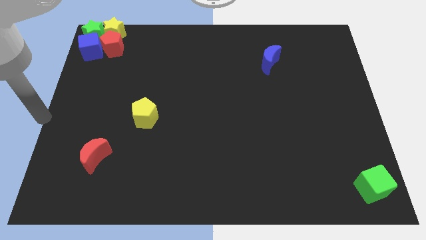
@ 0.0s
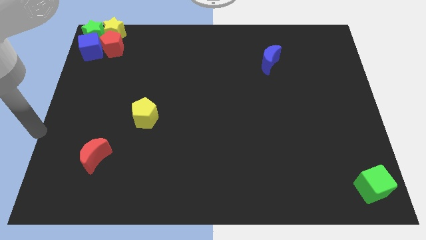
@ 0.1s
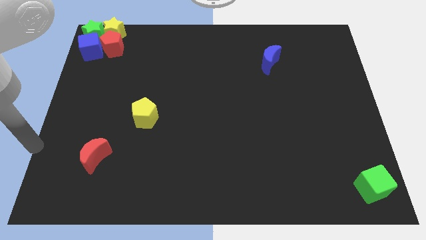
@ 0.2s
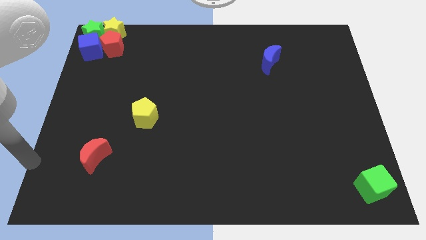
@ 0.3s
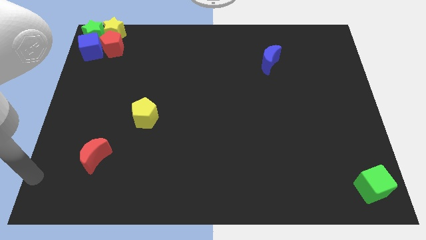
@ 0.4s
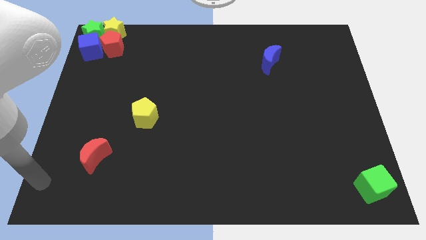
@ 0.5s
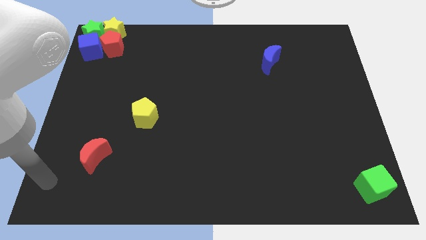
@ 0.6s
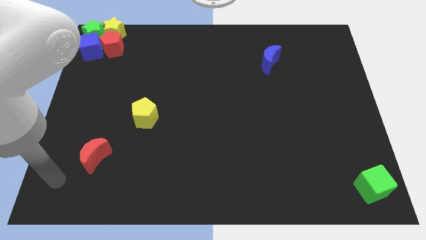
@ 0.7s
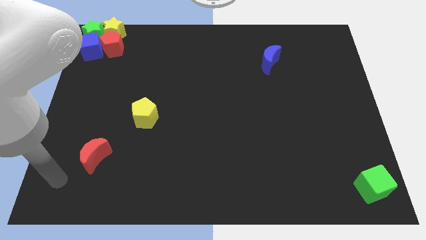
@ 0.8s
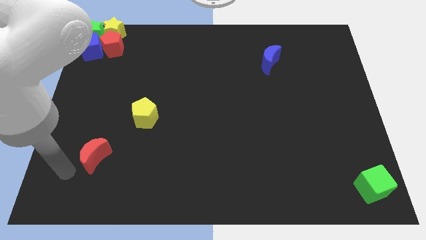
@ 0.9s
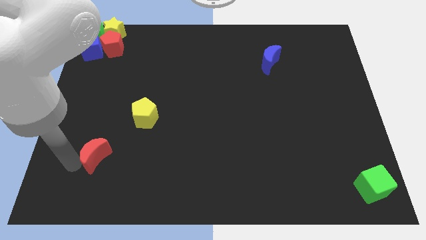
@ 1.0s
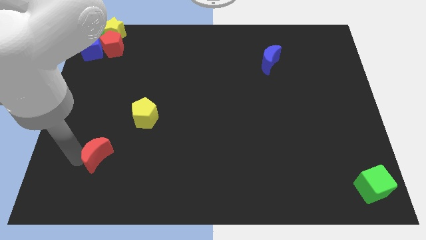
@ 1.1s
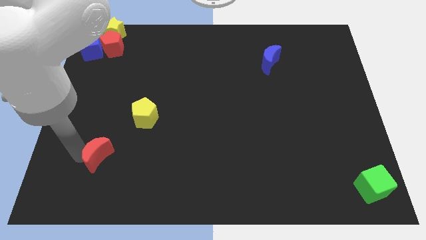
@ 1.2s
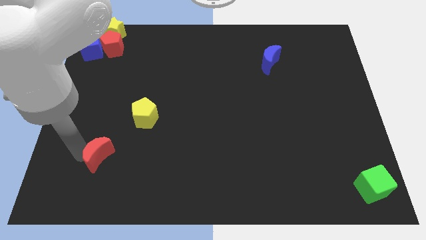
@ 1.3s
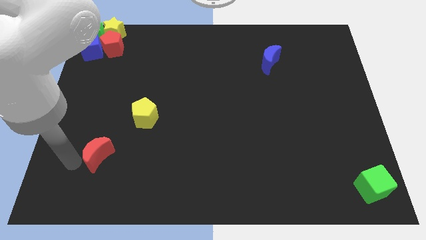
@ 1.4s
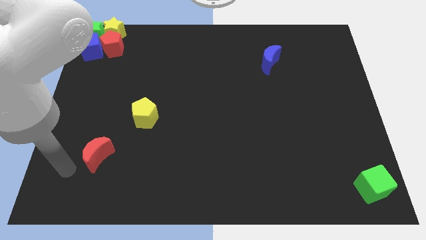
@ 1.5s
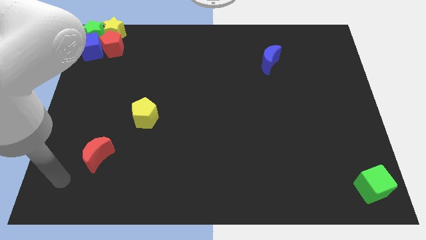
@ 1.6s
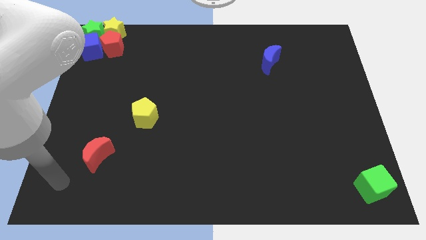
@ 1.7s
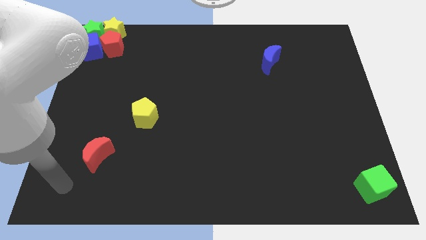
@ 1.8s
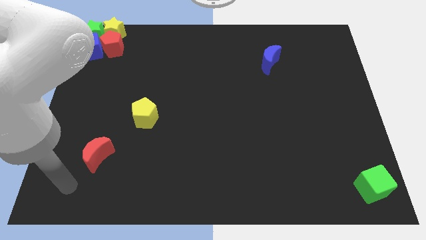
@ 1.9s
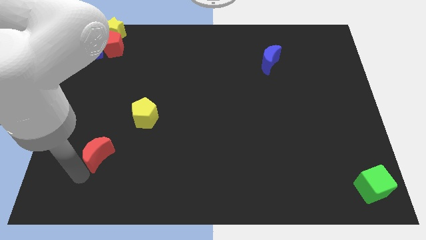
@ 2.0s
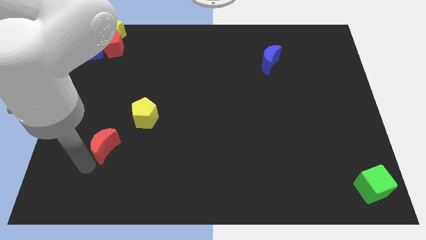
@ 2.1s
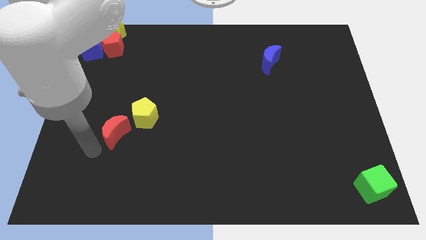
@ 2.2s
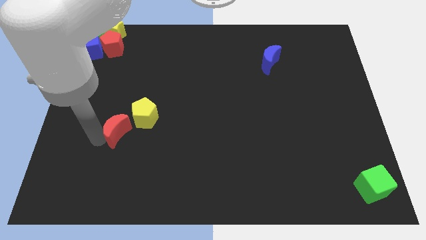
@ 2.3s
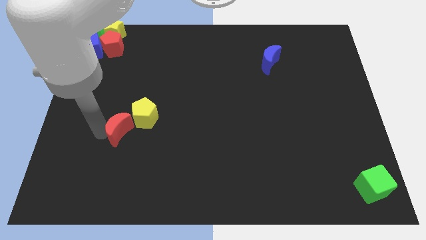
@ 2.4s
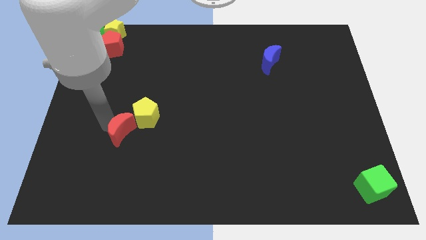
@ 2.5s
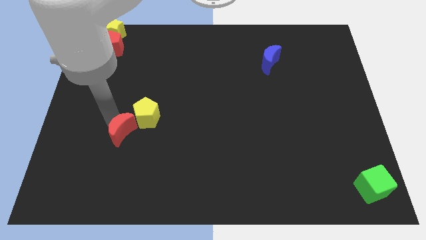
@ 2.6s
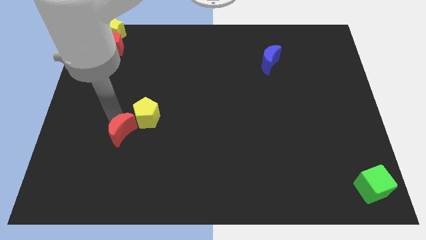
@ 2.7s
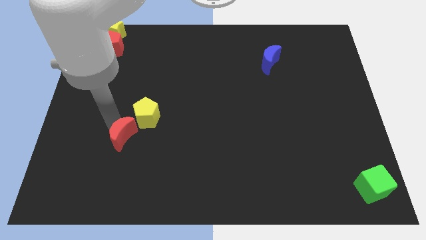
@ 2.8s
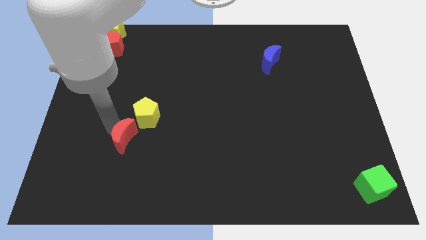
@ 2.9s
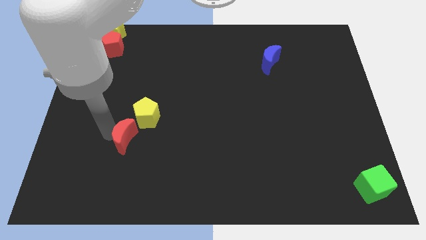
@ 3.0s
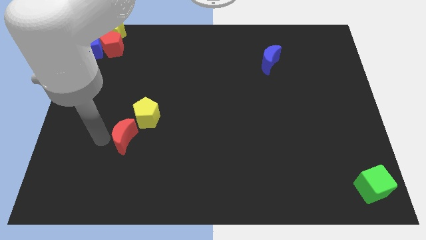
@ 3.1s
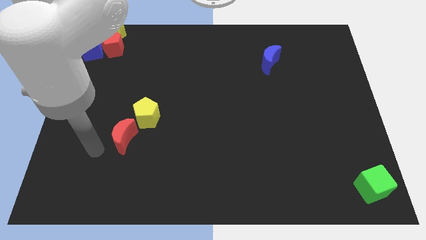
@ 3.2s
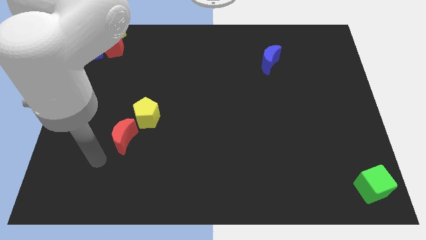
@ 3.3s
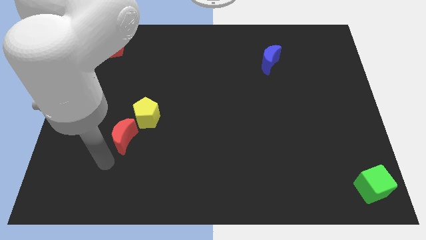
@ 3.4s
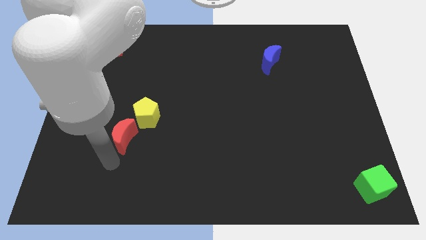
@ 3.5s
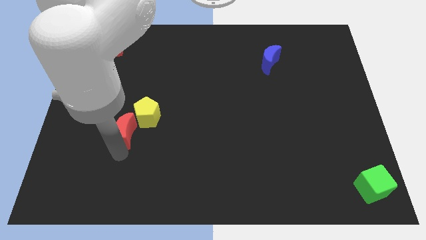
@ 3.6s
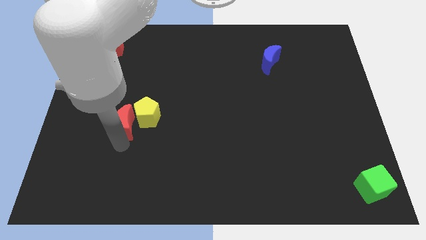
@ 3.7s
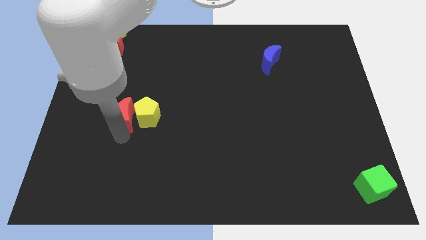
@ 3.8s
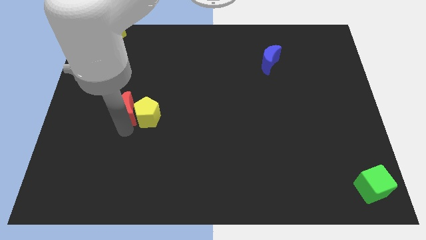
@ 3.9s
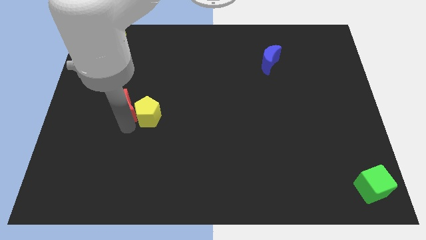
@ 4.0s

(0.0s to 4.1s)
move the red crescent to the left of the yellow pentagon

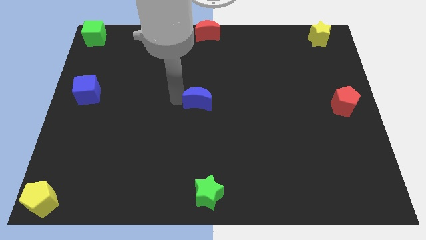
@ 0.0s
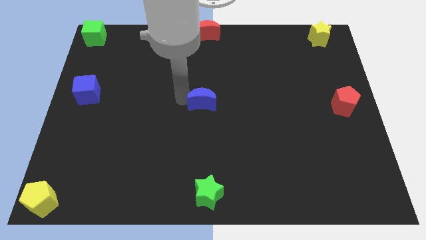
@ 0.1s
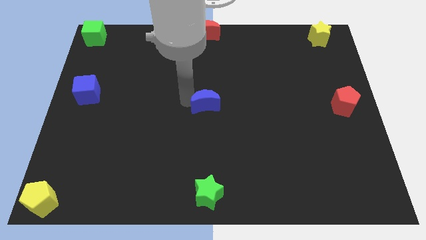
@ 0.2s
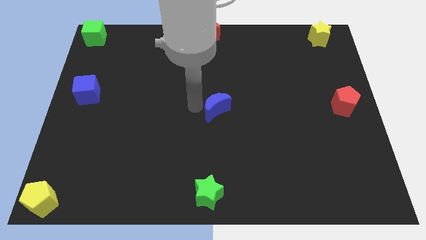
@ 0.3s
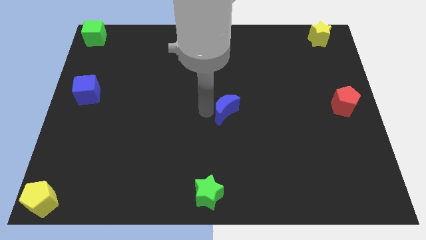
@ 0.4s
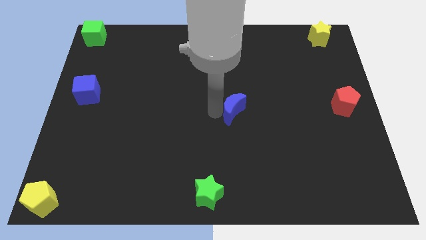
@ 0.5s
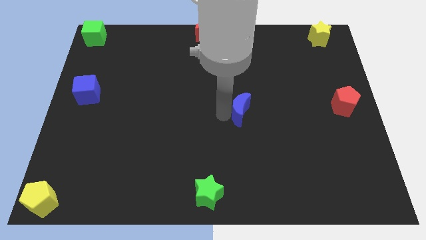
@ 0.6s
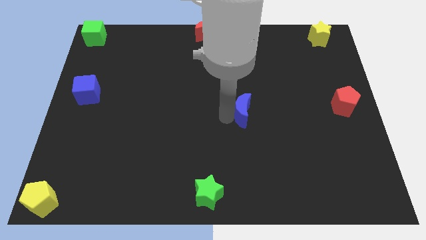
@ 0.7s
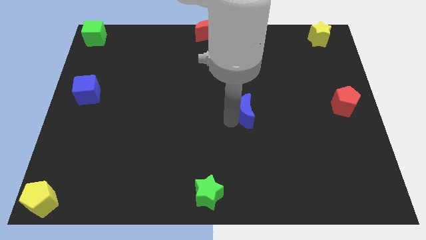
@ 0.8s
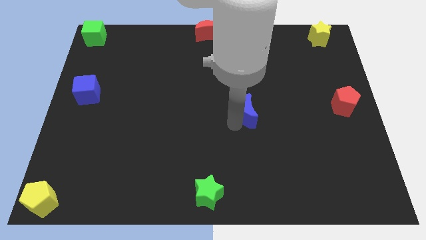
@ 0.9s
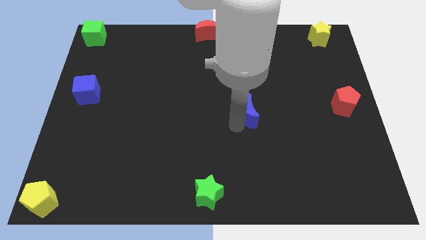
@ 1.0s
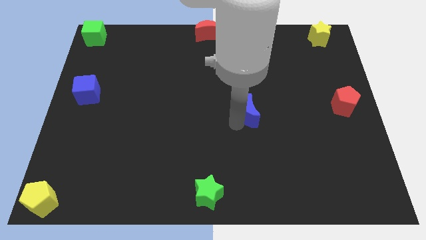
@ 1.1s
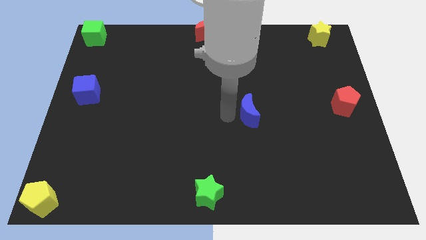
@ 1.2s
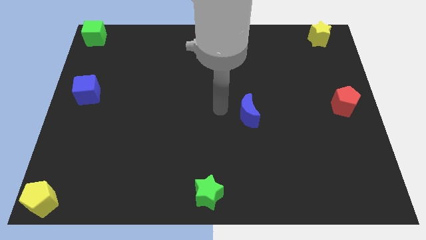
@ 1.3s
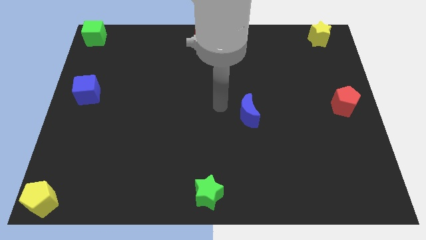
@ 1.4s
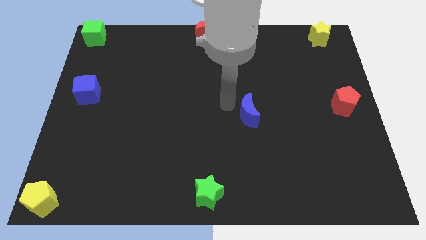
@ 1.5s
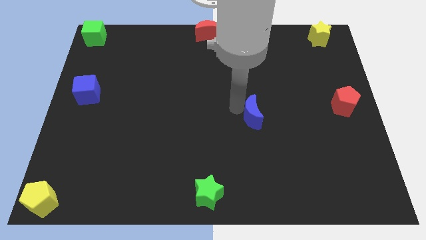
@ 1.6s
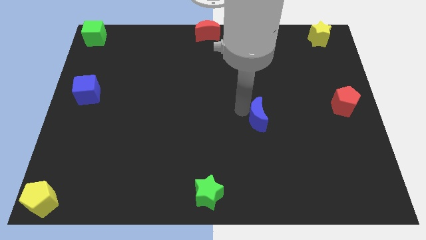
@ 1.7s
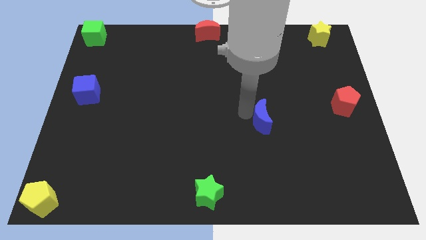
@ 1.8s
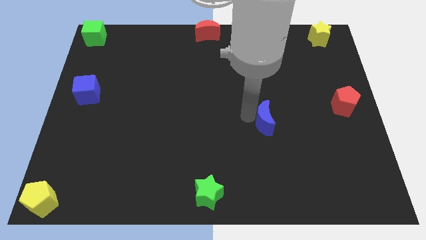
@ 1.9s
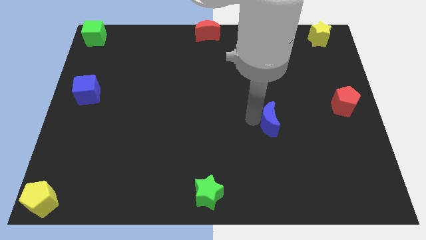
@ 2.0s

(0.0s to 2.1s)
move the blue crescent slightly to the right of the board

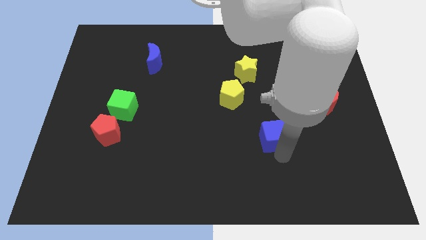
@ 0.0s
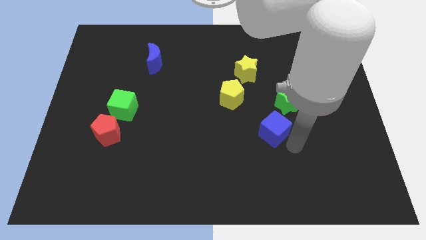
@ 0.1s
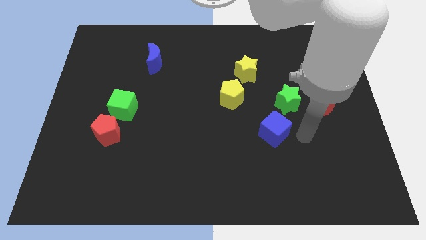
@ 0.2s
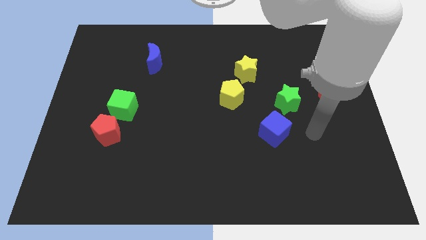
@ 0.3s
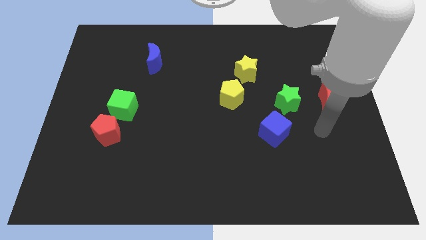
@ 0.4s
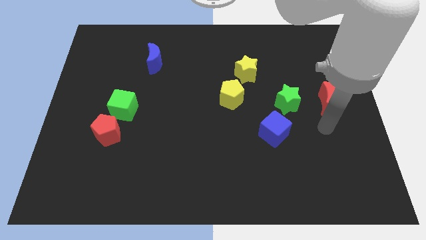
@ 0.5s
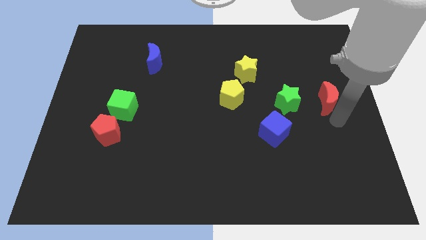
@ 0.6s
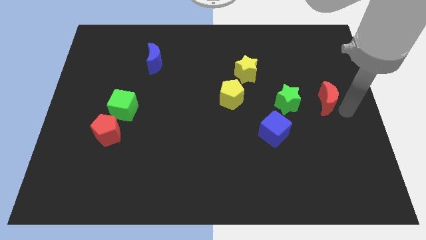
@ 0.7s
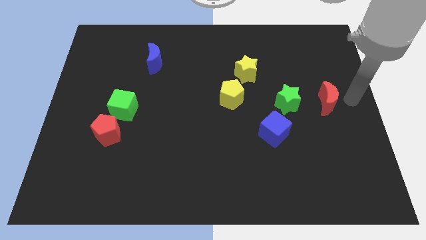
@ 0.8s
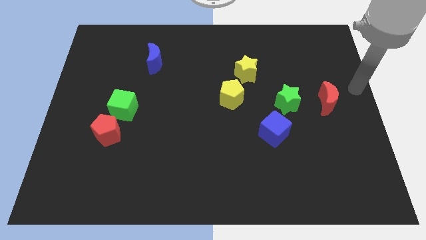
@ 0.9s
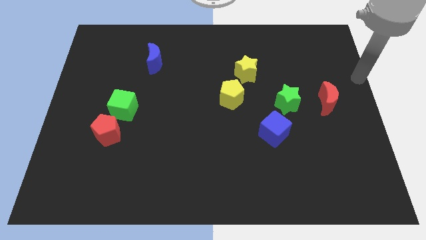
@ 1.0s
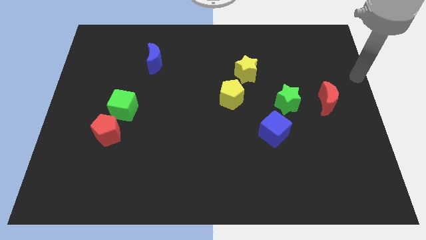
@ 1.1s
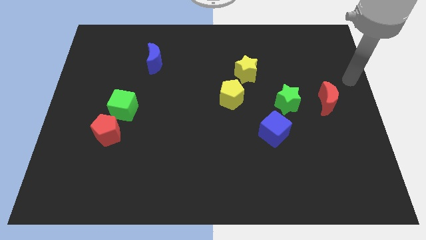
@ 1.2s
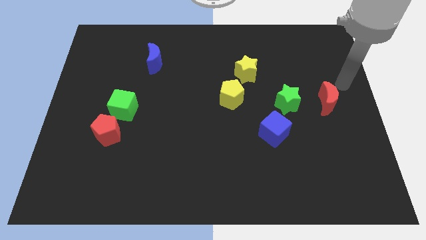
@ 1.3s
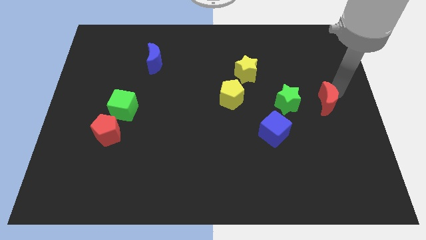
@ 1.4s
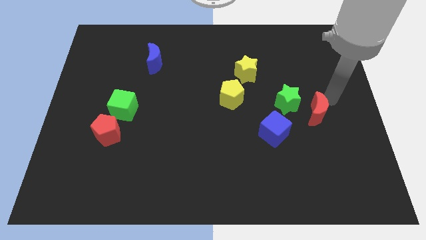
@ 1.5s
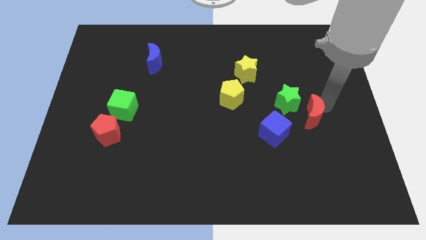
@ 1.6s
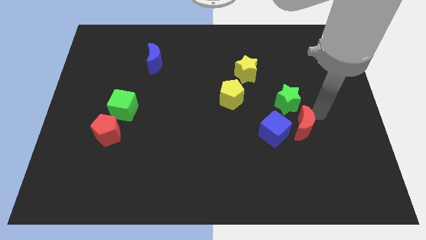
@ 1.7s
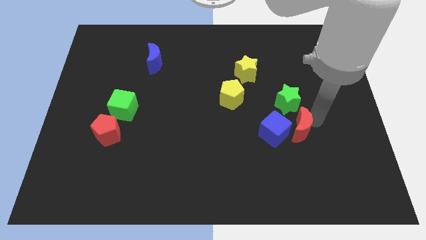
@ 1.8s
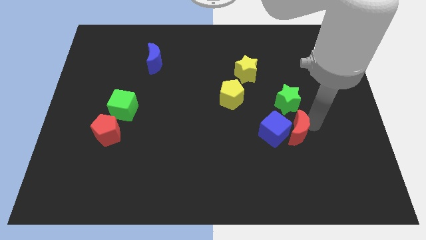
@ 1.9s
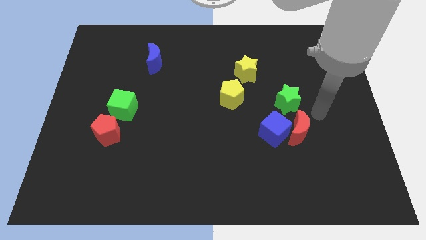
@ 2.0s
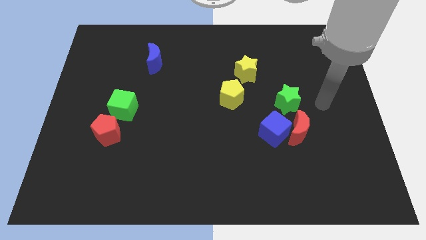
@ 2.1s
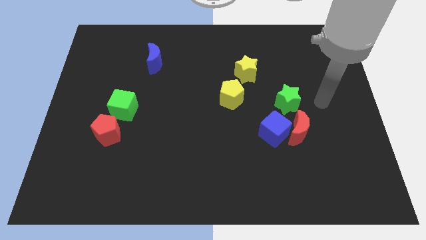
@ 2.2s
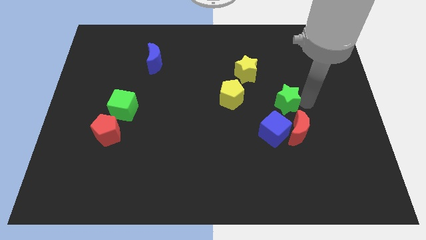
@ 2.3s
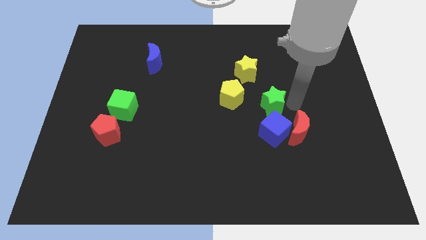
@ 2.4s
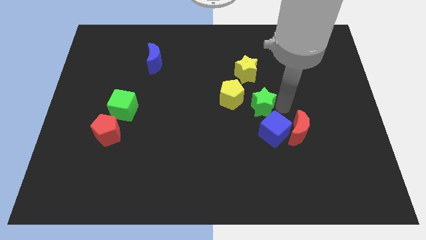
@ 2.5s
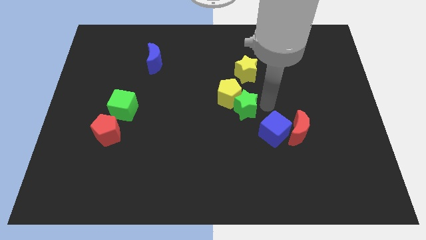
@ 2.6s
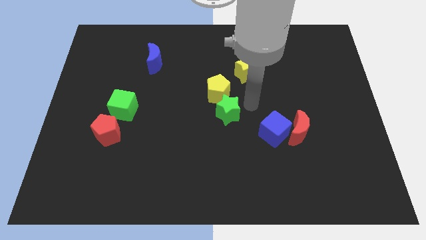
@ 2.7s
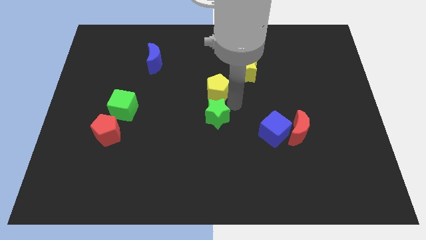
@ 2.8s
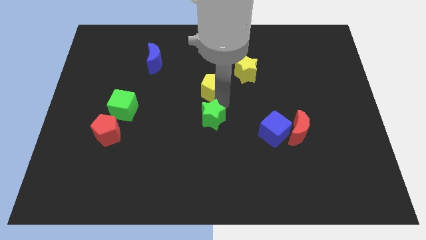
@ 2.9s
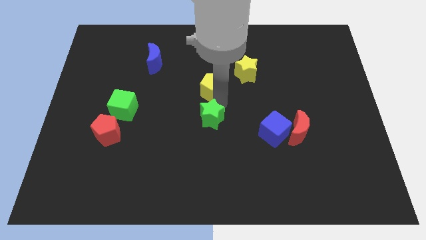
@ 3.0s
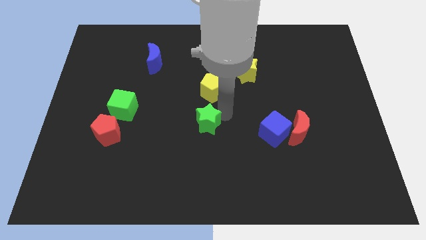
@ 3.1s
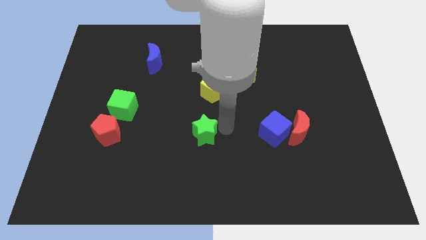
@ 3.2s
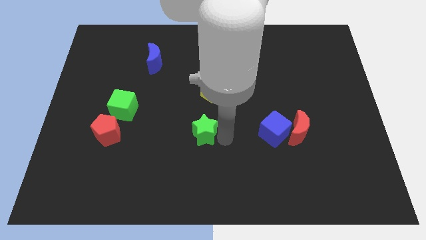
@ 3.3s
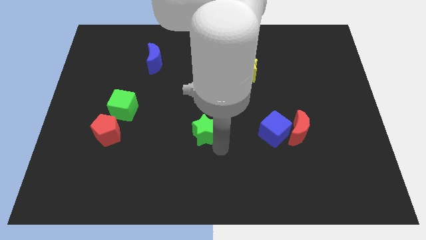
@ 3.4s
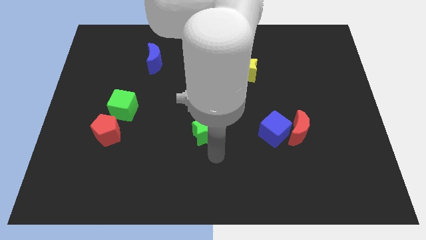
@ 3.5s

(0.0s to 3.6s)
push the red moon and the green star parallel to each other
